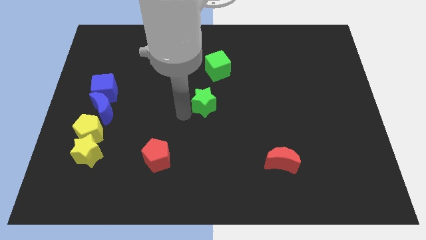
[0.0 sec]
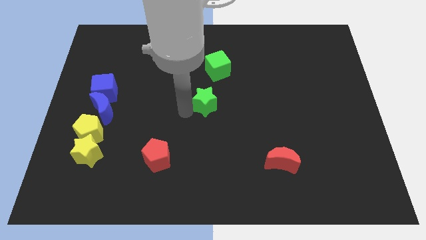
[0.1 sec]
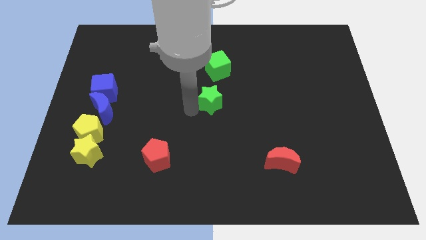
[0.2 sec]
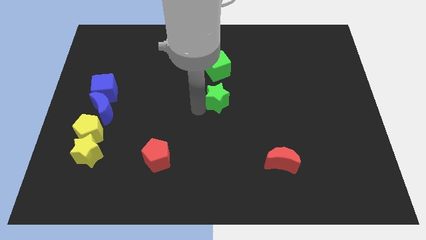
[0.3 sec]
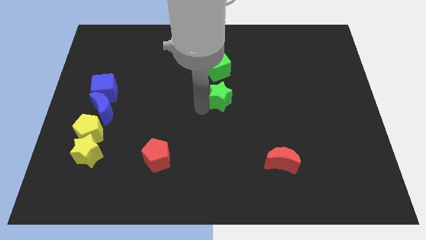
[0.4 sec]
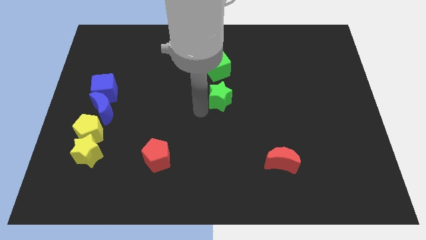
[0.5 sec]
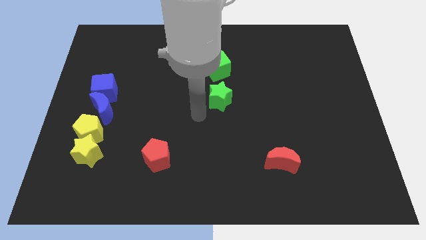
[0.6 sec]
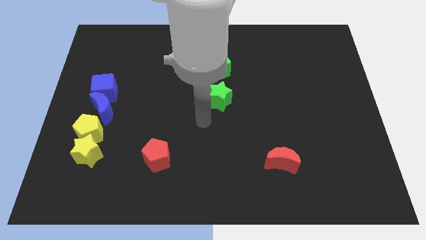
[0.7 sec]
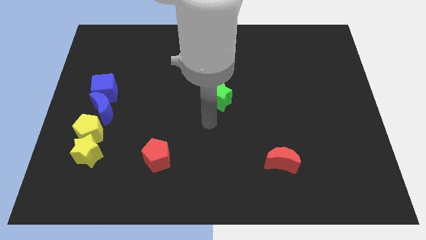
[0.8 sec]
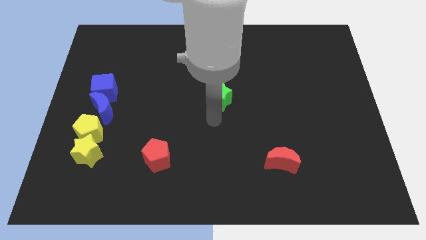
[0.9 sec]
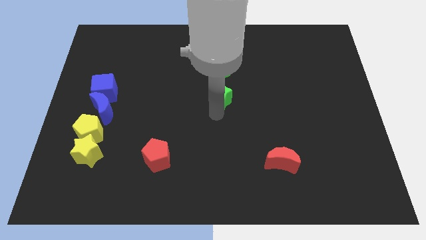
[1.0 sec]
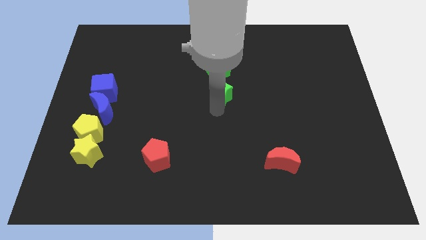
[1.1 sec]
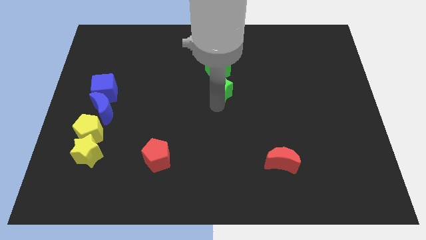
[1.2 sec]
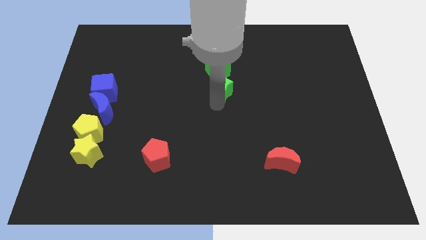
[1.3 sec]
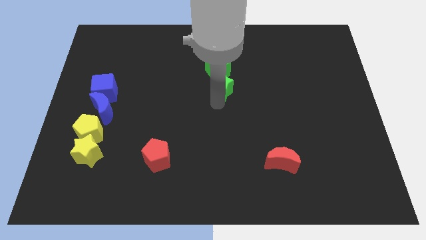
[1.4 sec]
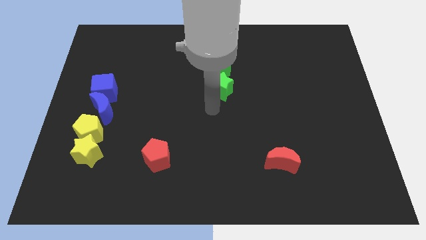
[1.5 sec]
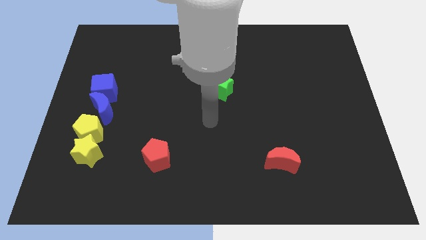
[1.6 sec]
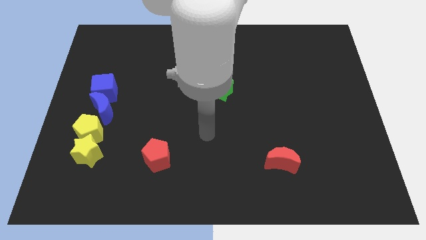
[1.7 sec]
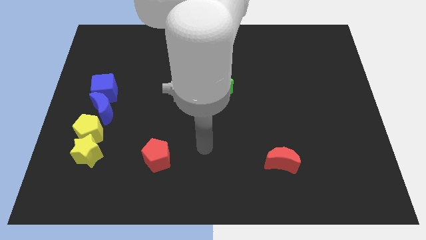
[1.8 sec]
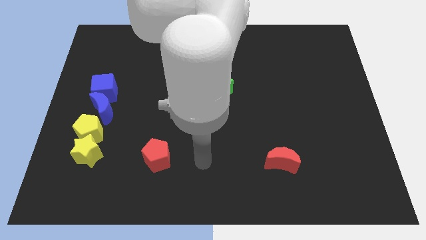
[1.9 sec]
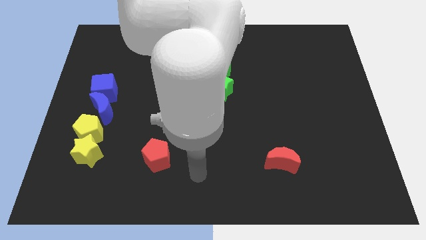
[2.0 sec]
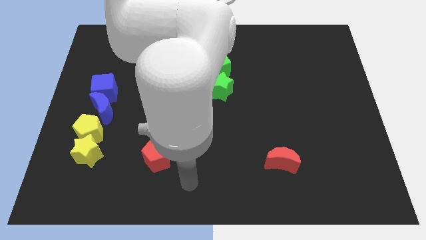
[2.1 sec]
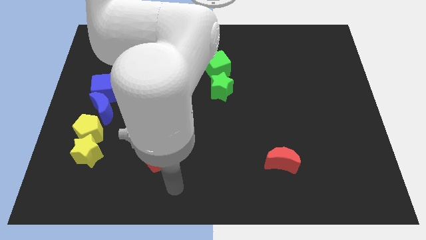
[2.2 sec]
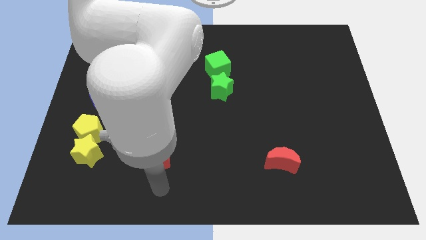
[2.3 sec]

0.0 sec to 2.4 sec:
move the green star close to the green cube

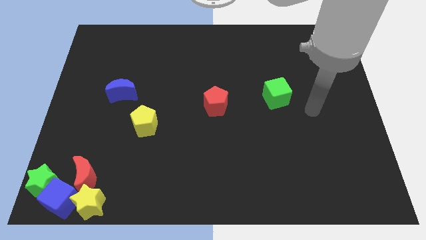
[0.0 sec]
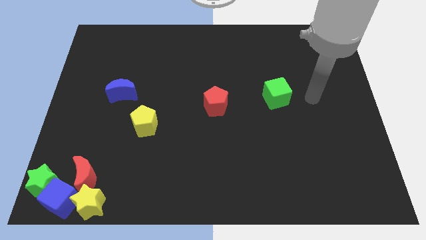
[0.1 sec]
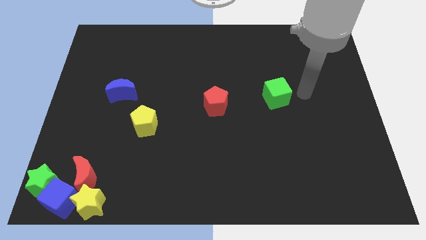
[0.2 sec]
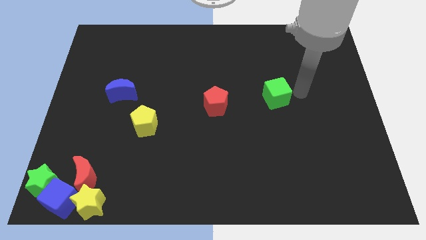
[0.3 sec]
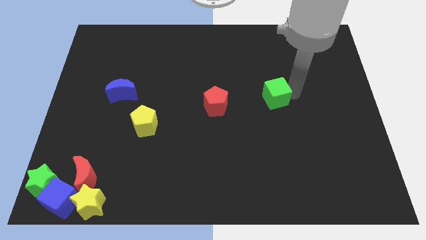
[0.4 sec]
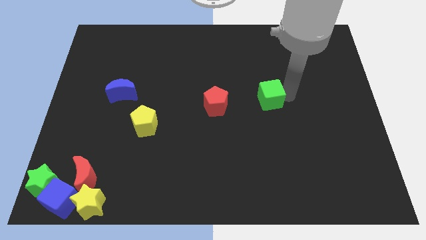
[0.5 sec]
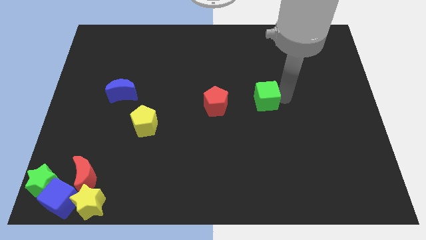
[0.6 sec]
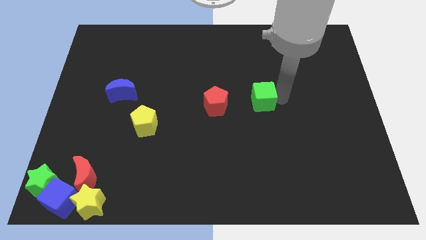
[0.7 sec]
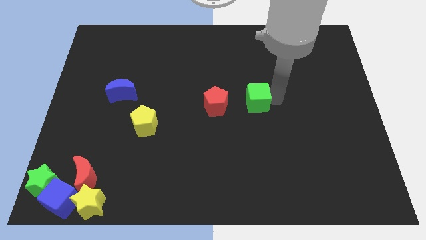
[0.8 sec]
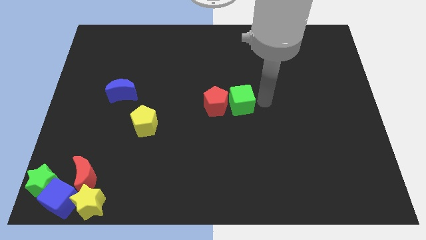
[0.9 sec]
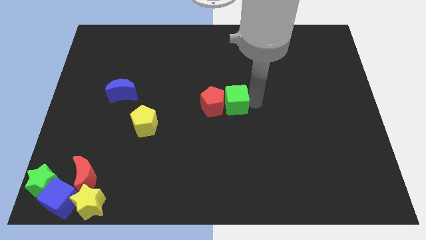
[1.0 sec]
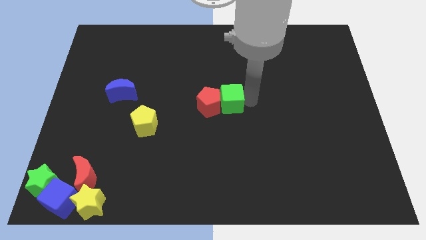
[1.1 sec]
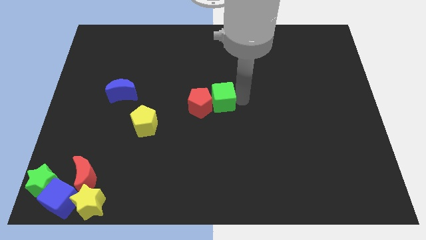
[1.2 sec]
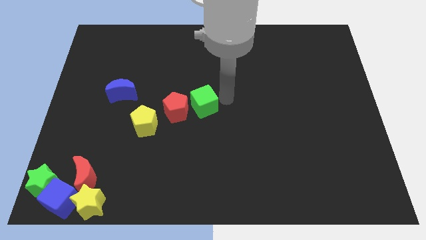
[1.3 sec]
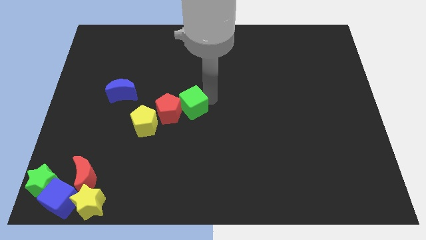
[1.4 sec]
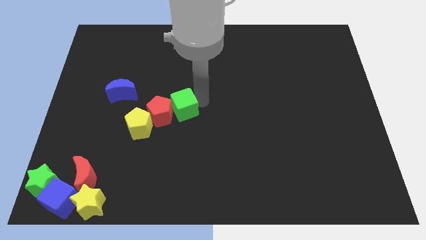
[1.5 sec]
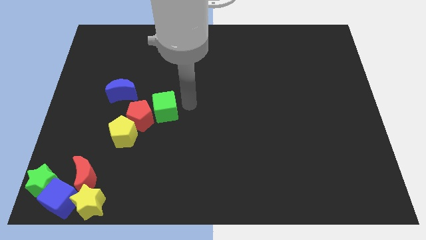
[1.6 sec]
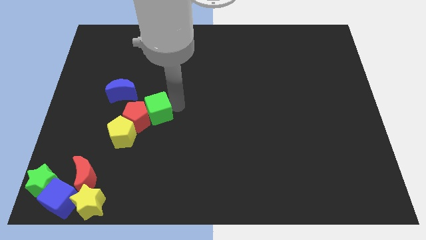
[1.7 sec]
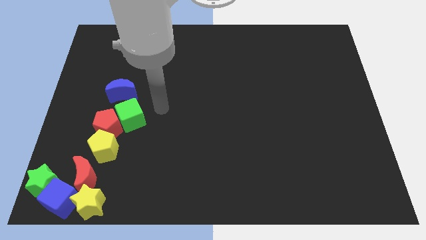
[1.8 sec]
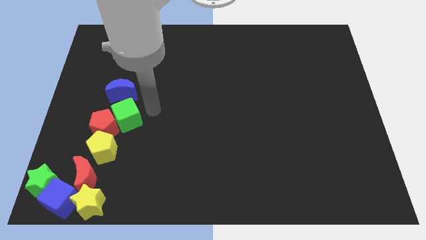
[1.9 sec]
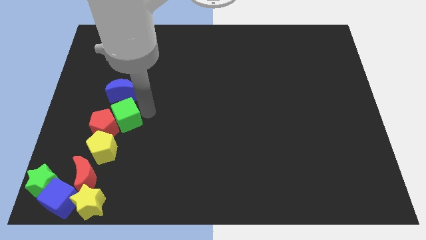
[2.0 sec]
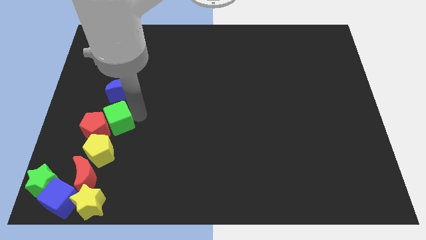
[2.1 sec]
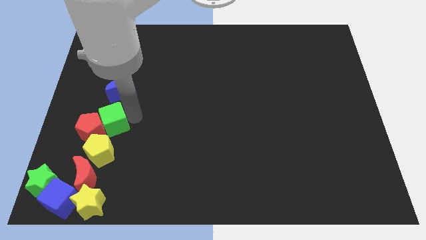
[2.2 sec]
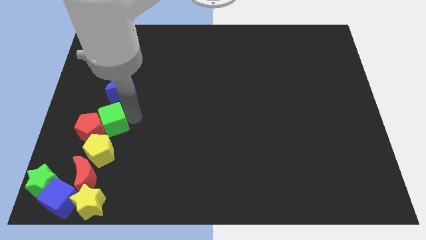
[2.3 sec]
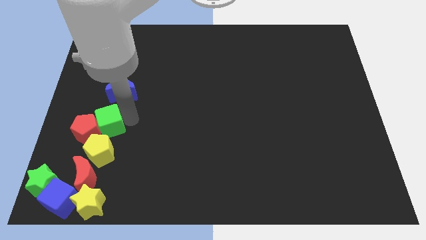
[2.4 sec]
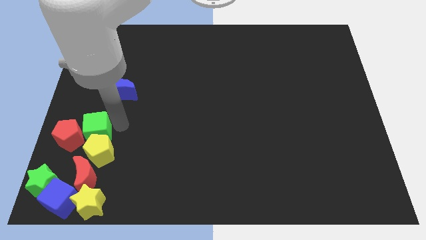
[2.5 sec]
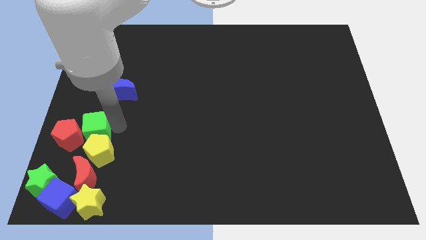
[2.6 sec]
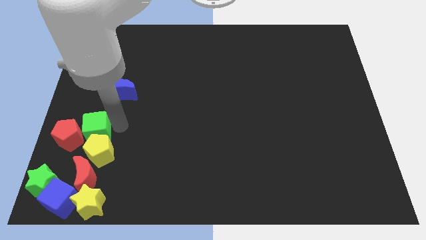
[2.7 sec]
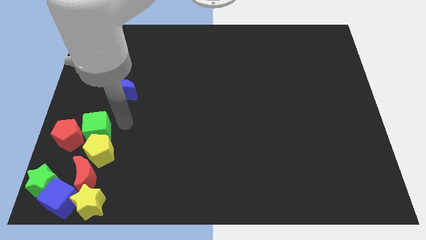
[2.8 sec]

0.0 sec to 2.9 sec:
push green cube above yellow pentagon

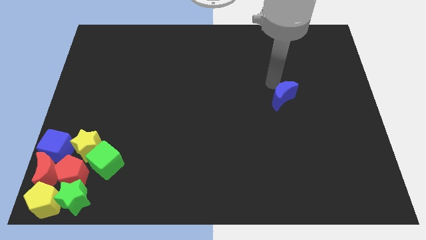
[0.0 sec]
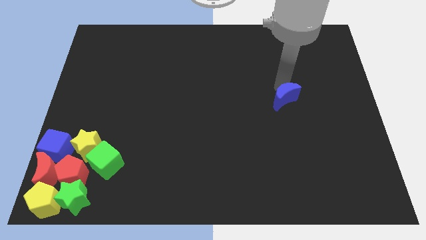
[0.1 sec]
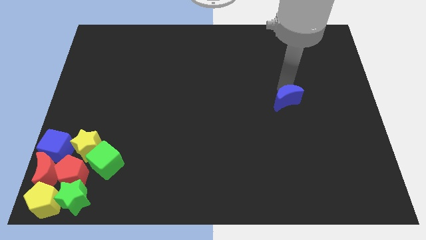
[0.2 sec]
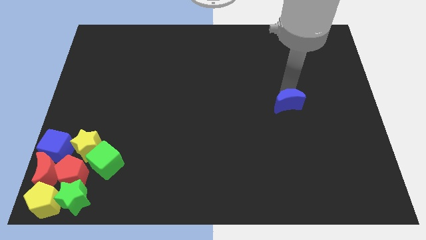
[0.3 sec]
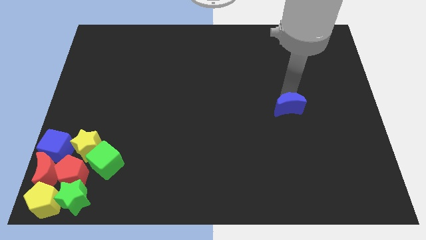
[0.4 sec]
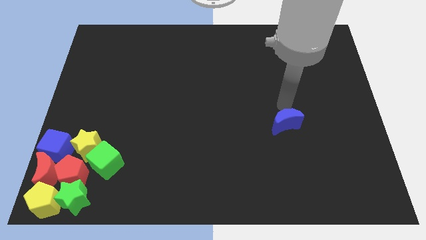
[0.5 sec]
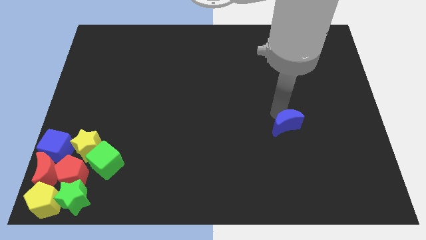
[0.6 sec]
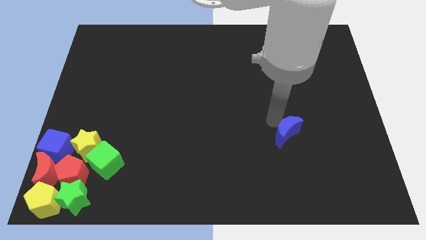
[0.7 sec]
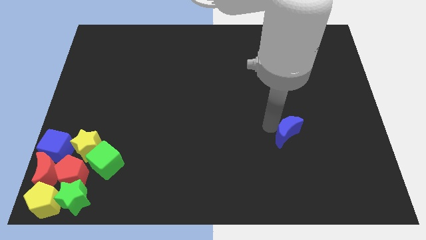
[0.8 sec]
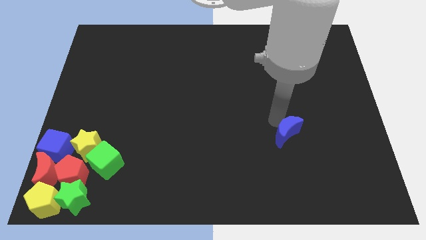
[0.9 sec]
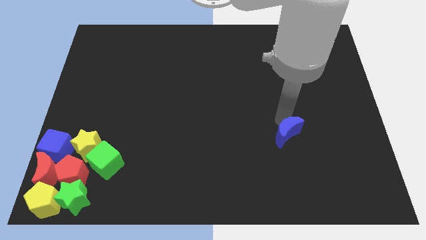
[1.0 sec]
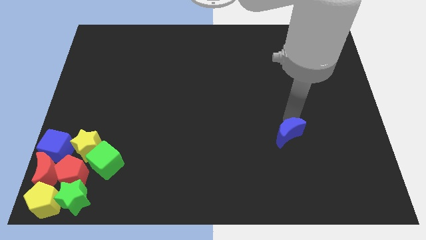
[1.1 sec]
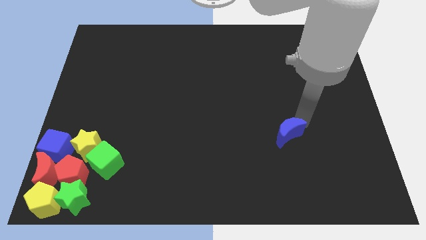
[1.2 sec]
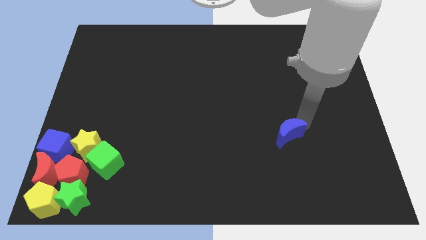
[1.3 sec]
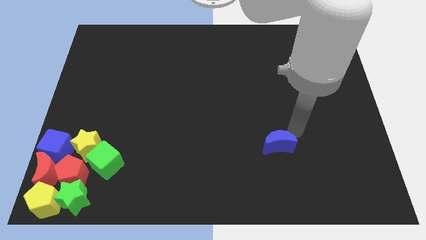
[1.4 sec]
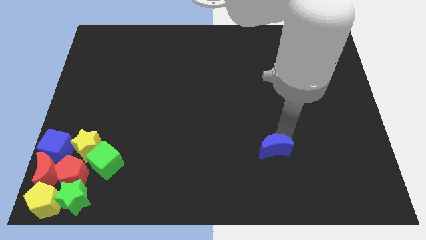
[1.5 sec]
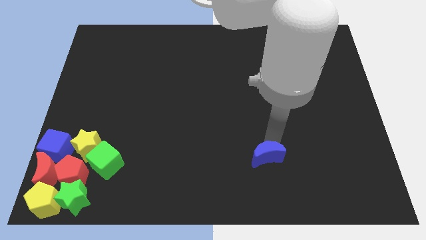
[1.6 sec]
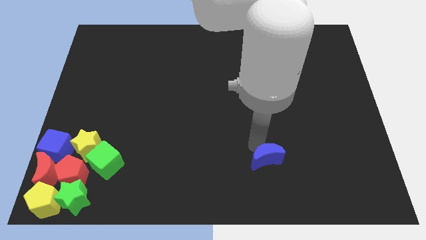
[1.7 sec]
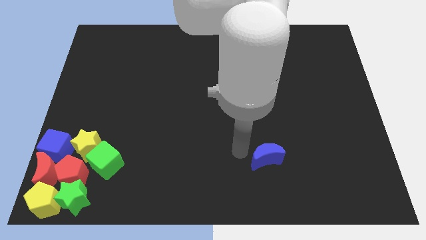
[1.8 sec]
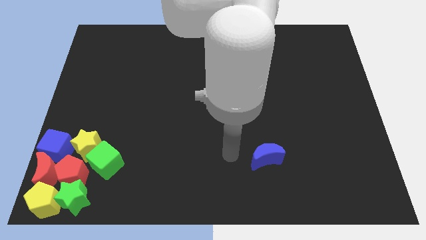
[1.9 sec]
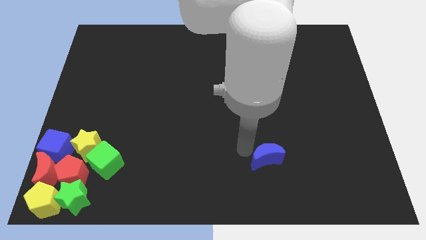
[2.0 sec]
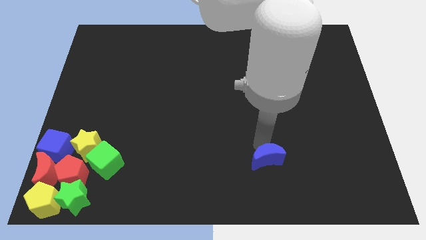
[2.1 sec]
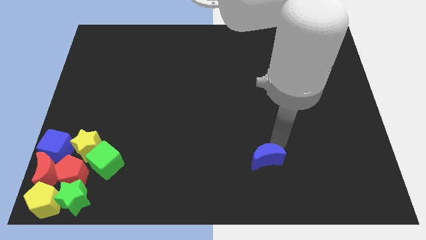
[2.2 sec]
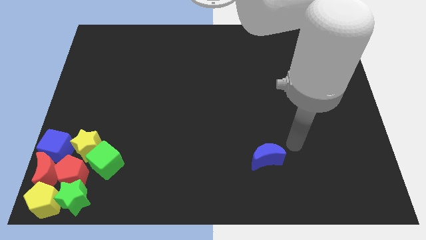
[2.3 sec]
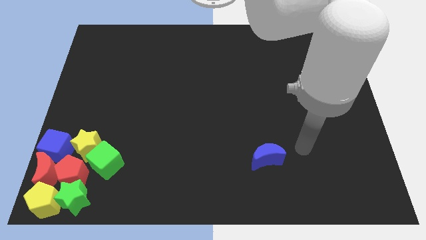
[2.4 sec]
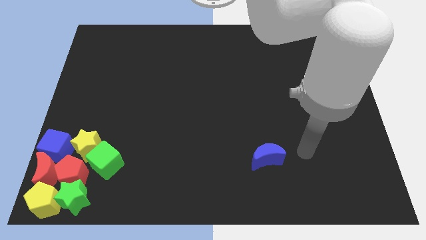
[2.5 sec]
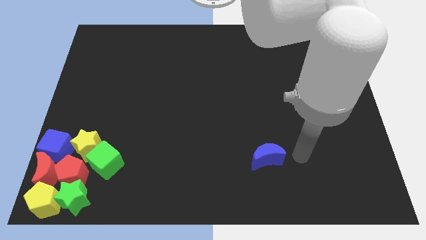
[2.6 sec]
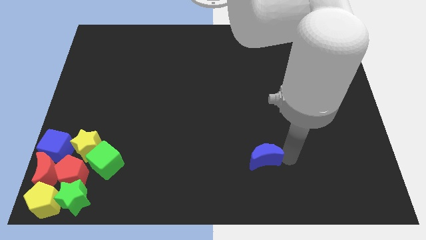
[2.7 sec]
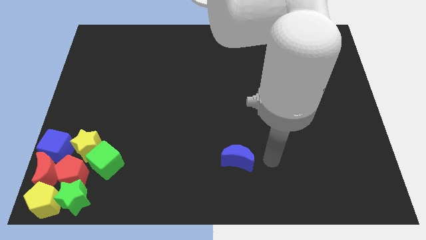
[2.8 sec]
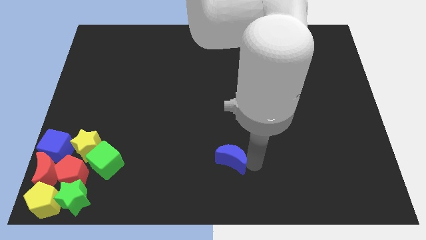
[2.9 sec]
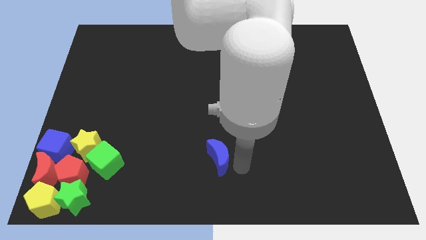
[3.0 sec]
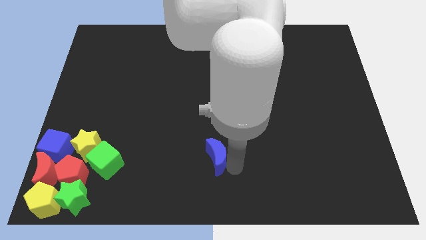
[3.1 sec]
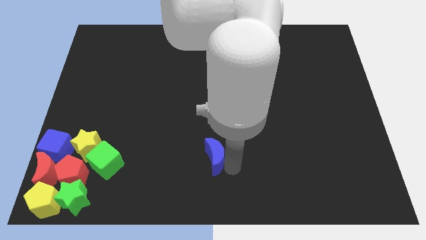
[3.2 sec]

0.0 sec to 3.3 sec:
place the blue crescent at the bottom center of the board

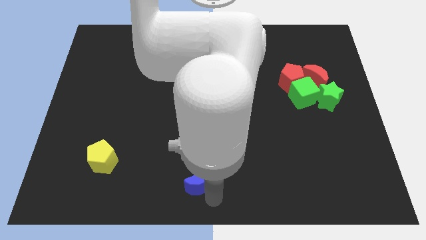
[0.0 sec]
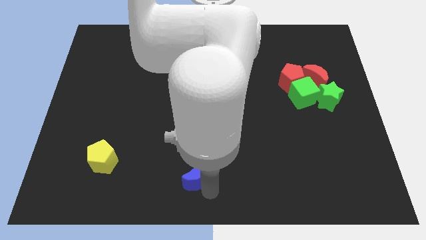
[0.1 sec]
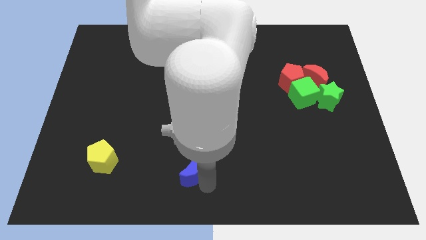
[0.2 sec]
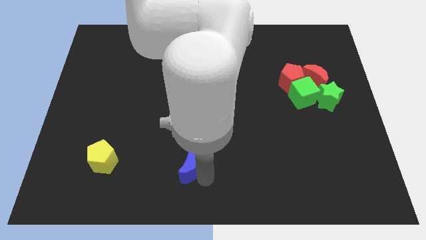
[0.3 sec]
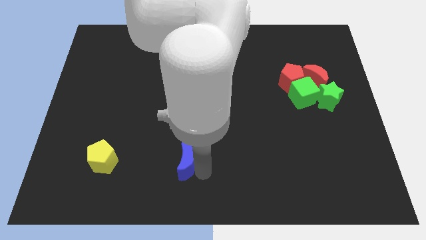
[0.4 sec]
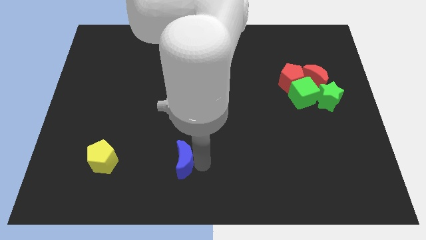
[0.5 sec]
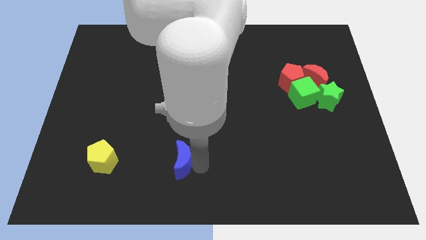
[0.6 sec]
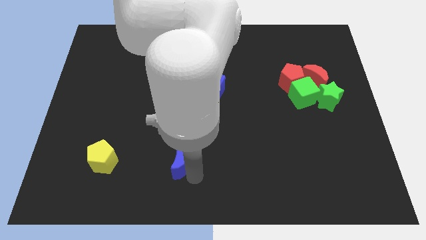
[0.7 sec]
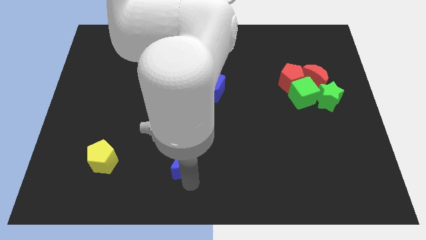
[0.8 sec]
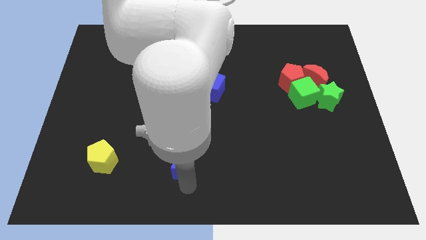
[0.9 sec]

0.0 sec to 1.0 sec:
push the blue crescent towards the left side of the board
